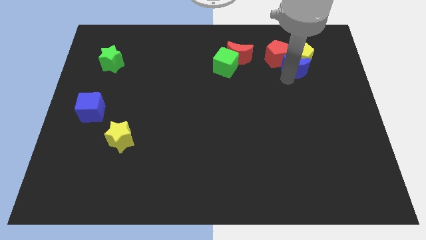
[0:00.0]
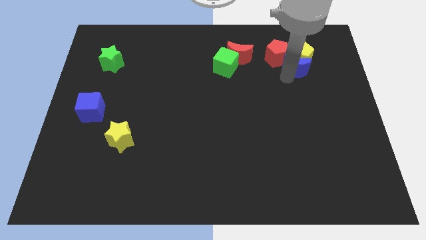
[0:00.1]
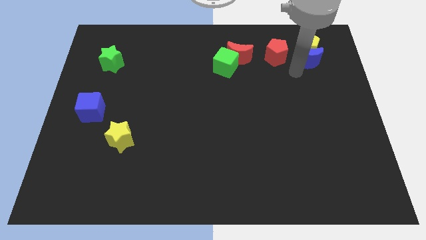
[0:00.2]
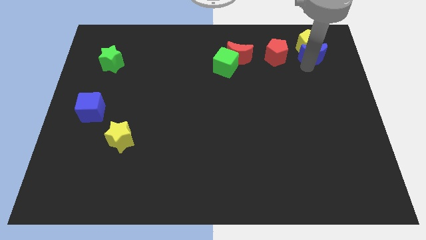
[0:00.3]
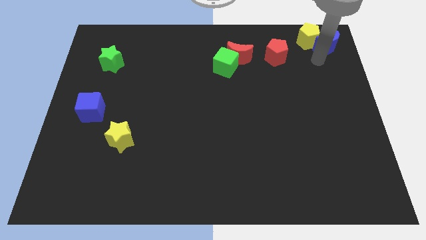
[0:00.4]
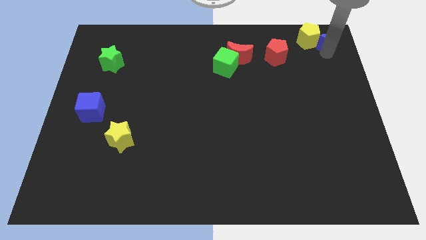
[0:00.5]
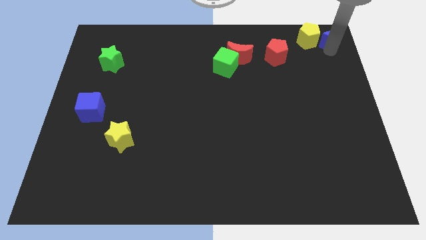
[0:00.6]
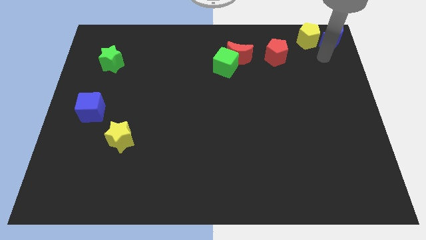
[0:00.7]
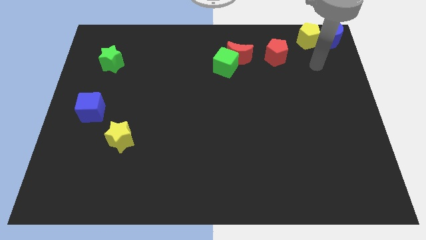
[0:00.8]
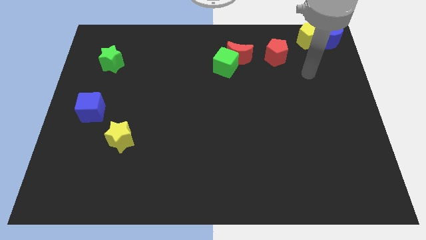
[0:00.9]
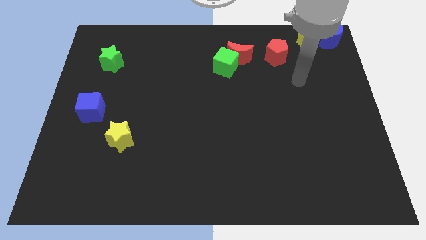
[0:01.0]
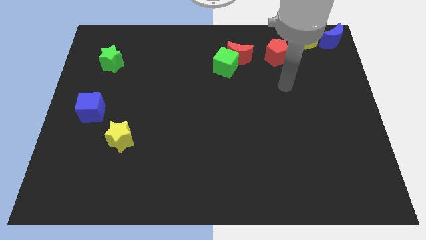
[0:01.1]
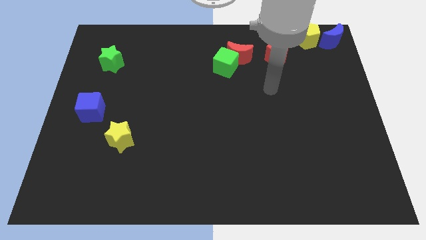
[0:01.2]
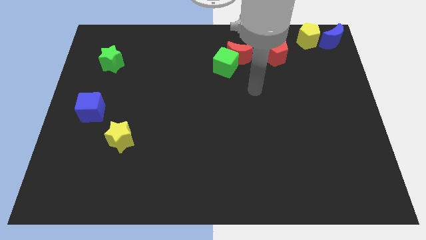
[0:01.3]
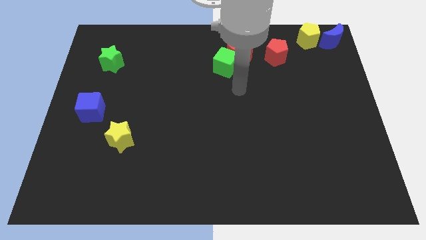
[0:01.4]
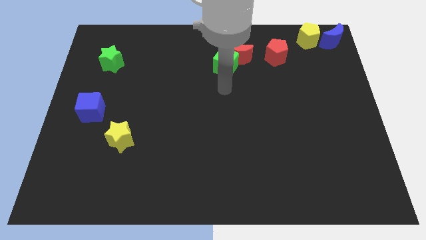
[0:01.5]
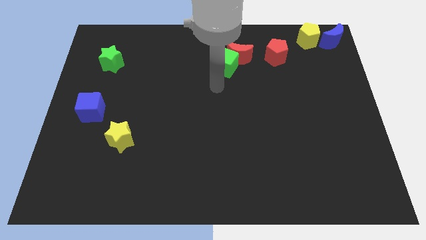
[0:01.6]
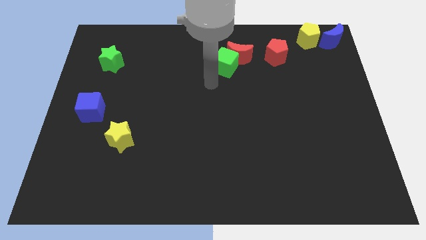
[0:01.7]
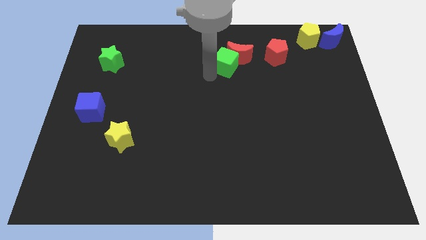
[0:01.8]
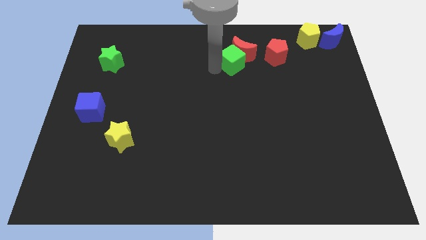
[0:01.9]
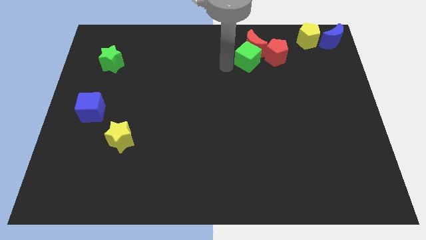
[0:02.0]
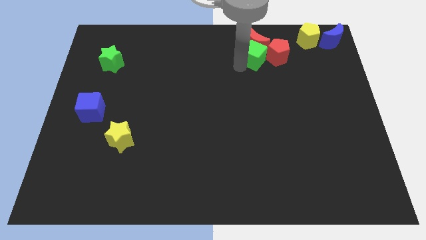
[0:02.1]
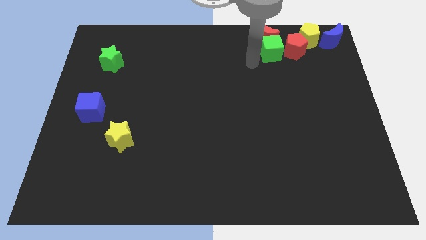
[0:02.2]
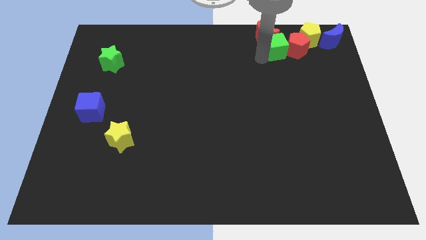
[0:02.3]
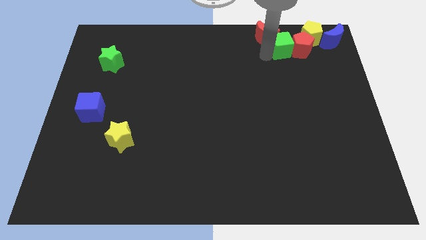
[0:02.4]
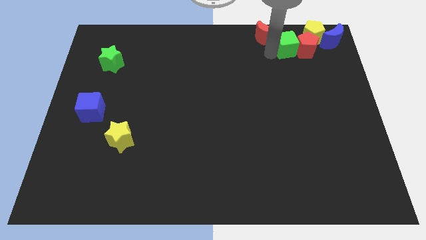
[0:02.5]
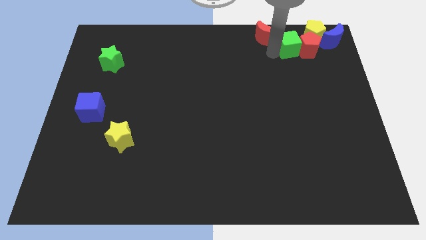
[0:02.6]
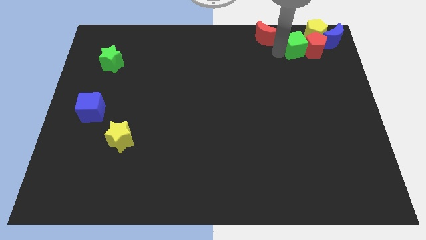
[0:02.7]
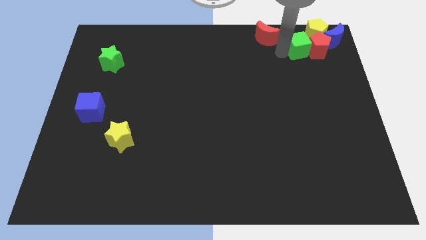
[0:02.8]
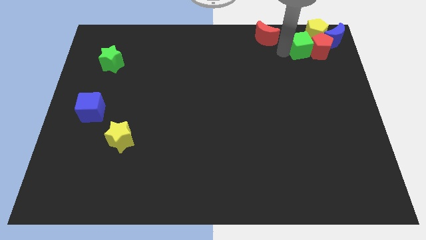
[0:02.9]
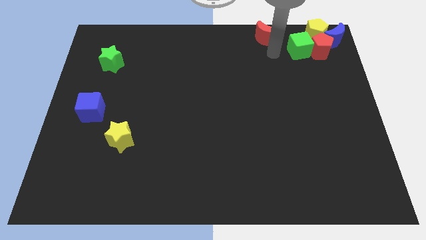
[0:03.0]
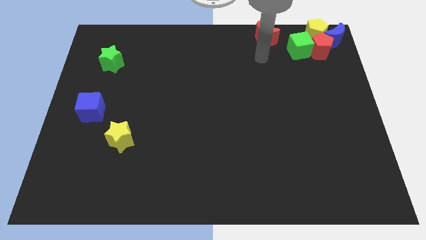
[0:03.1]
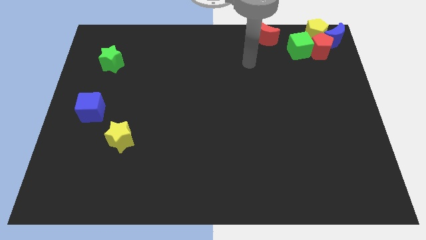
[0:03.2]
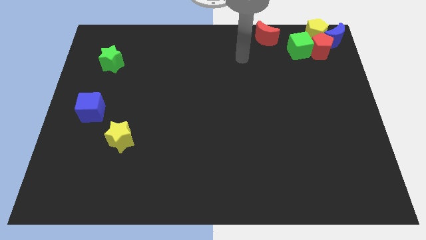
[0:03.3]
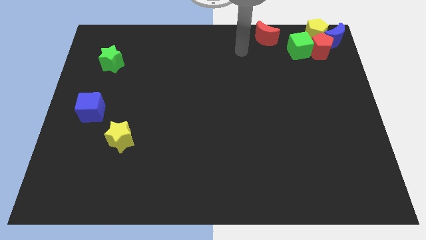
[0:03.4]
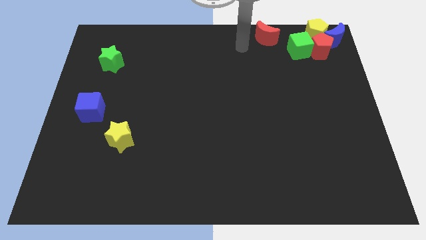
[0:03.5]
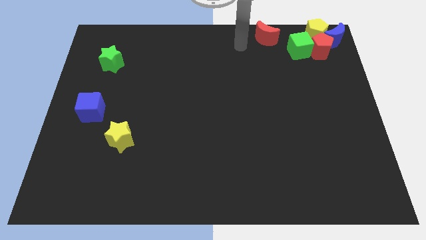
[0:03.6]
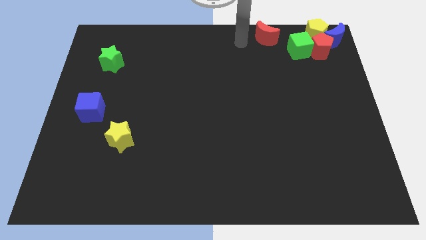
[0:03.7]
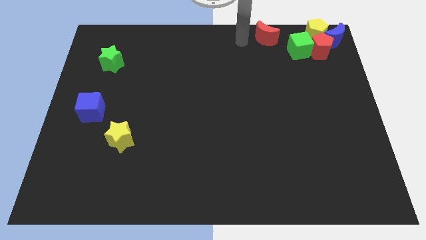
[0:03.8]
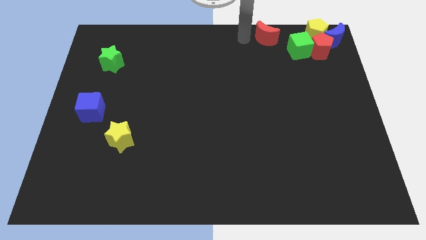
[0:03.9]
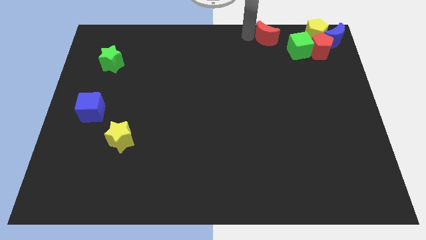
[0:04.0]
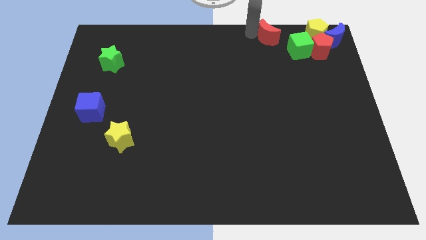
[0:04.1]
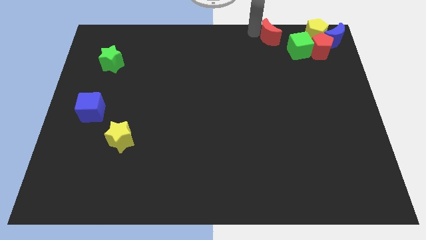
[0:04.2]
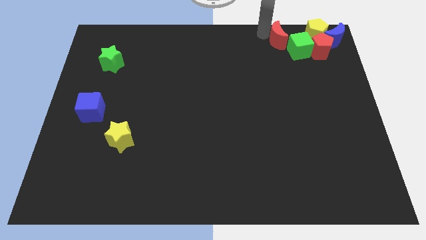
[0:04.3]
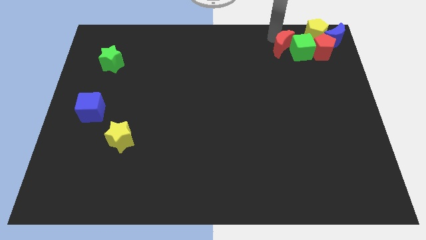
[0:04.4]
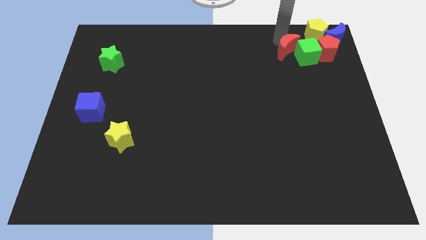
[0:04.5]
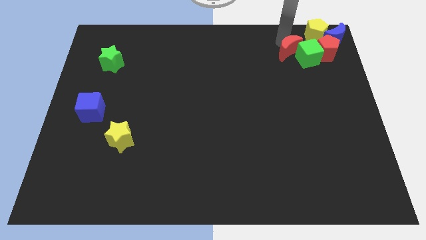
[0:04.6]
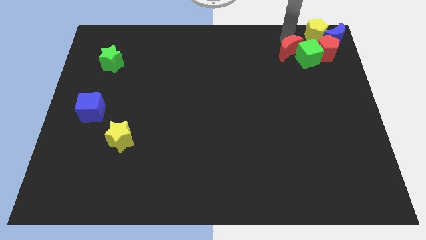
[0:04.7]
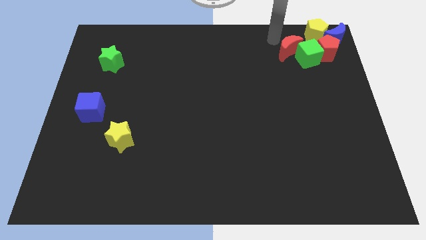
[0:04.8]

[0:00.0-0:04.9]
push the group of blocks to the top right corner

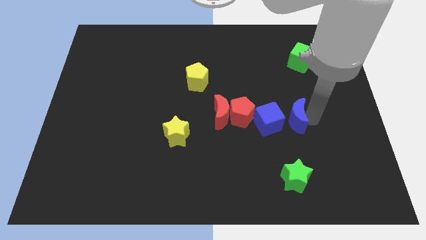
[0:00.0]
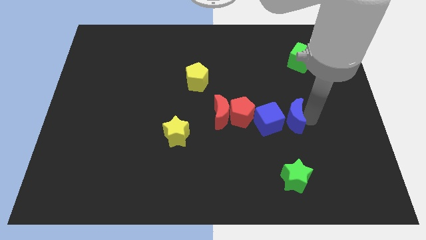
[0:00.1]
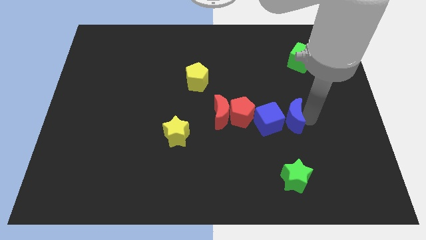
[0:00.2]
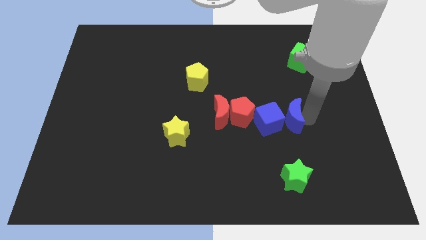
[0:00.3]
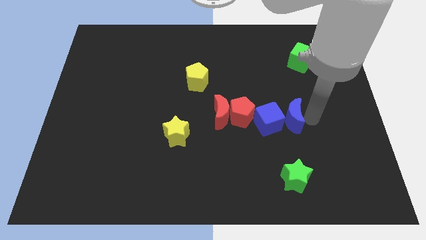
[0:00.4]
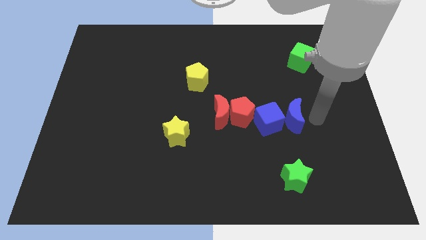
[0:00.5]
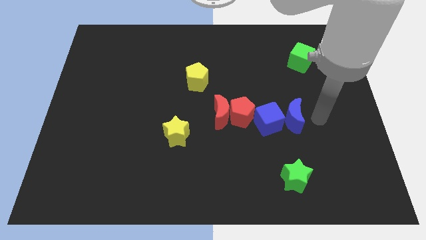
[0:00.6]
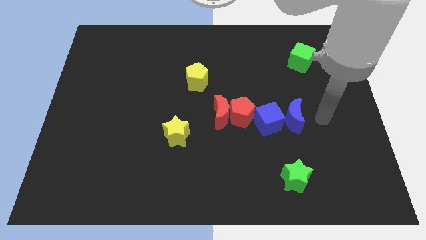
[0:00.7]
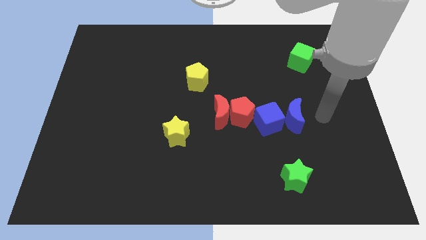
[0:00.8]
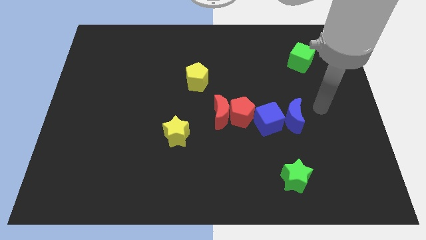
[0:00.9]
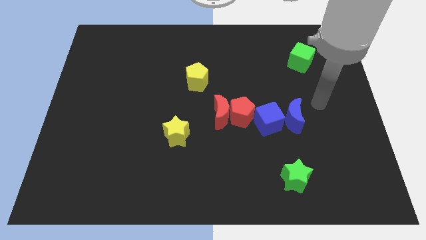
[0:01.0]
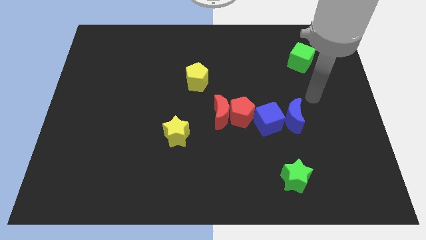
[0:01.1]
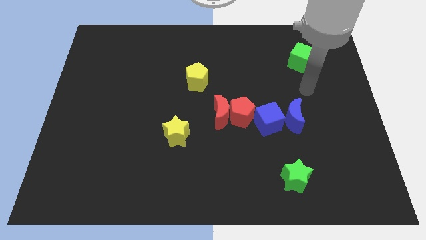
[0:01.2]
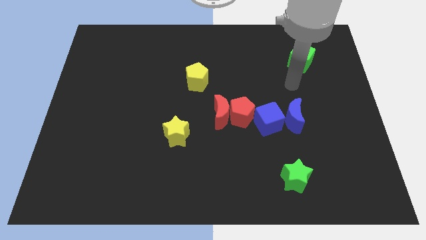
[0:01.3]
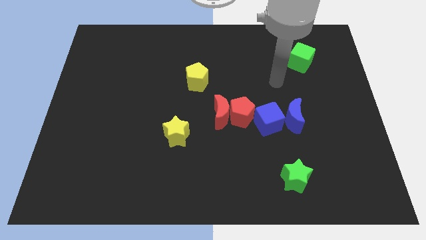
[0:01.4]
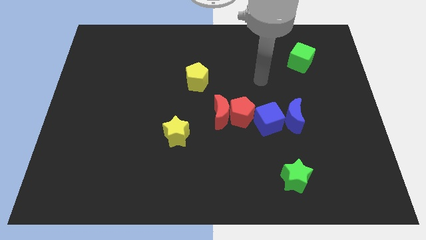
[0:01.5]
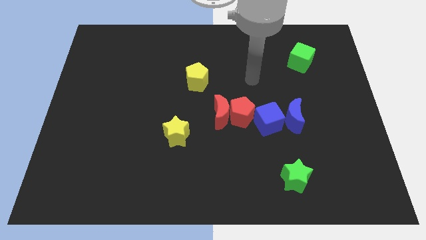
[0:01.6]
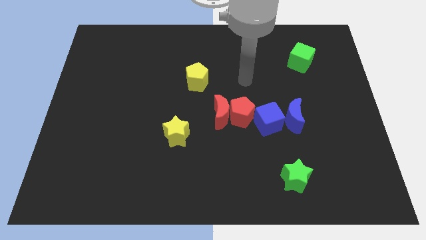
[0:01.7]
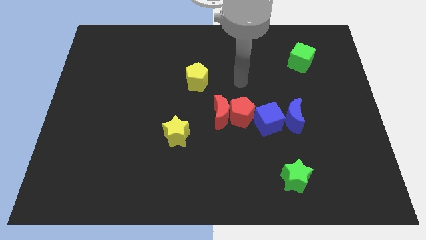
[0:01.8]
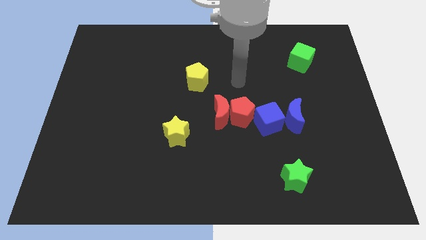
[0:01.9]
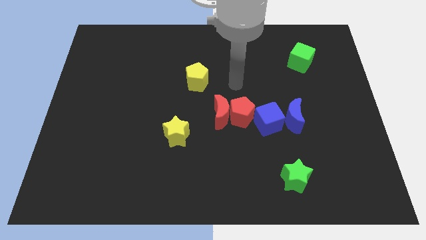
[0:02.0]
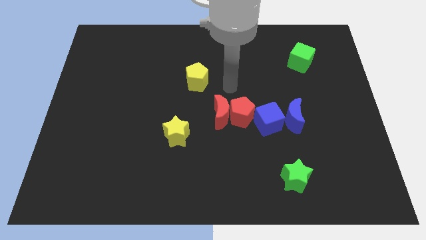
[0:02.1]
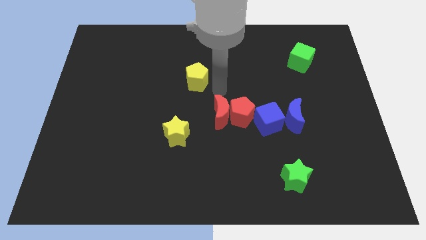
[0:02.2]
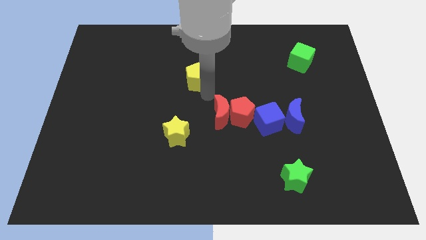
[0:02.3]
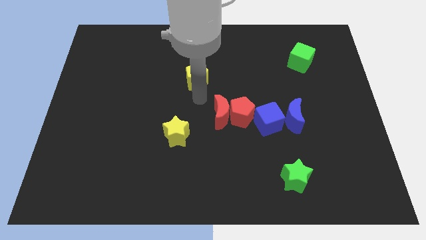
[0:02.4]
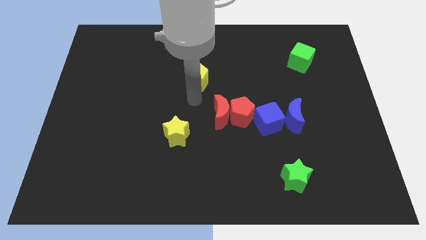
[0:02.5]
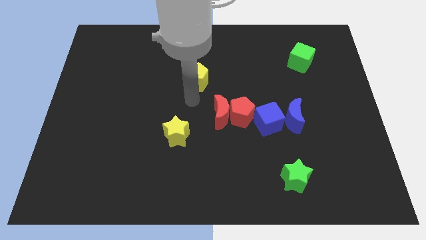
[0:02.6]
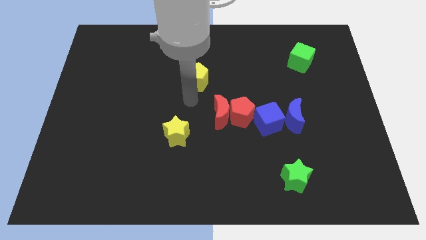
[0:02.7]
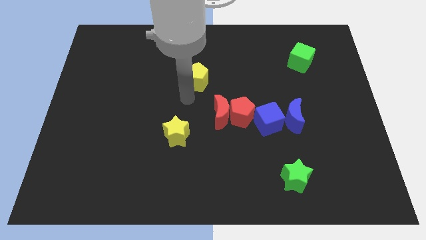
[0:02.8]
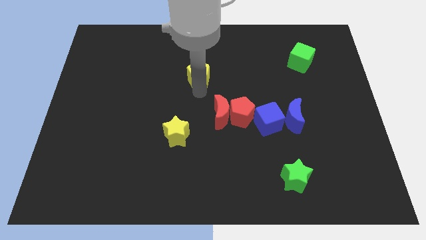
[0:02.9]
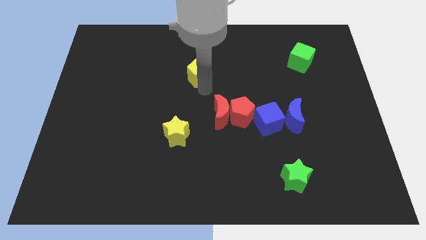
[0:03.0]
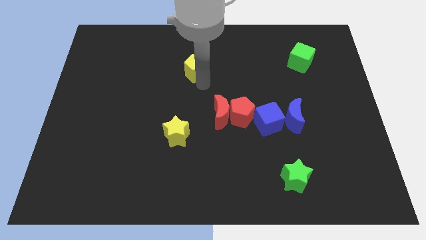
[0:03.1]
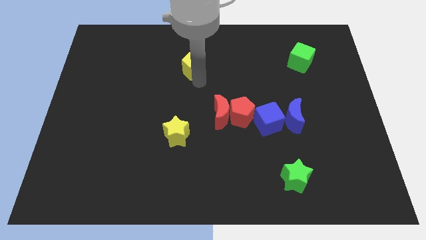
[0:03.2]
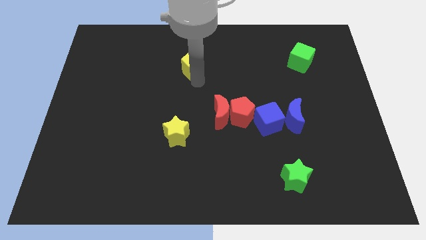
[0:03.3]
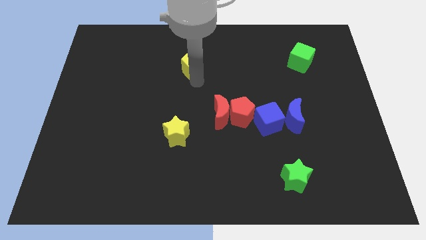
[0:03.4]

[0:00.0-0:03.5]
move the yellow pentagon slightly upwards

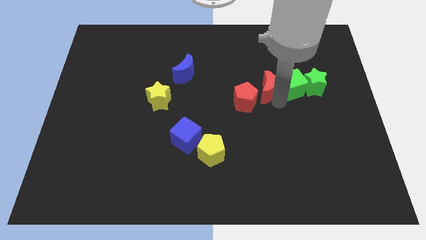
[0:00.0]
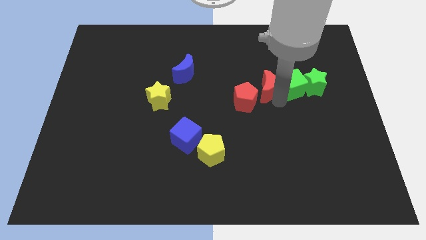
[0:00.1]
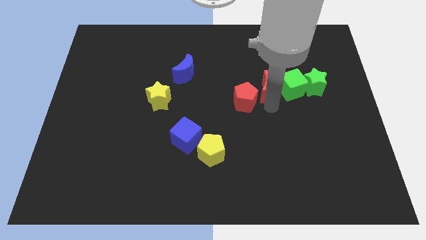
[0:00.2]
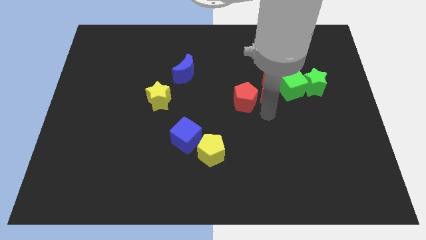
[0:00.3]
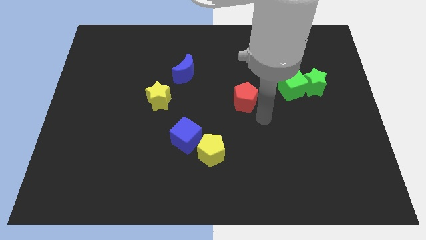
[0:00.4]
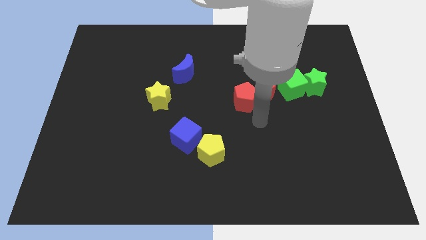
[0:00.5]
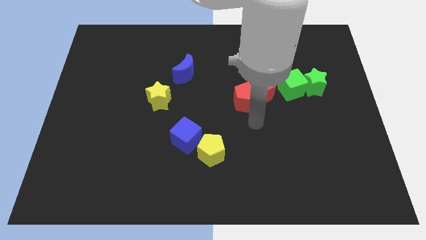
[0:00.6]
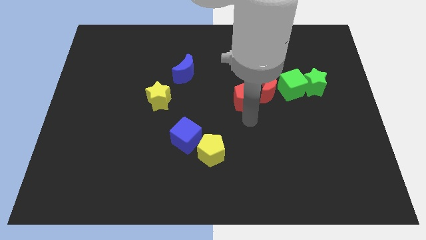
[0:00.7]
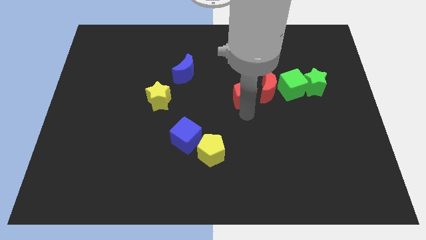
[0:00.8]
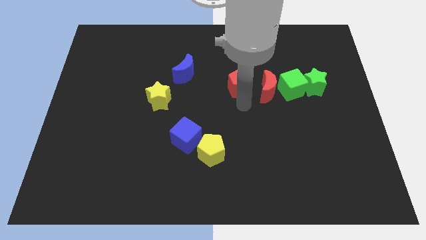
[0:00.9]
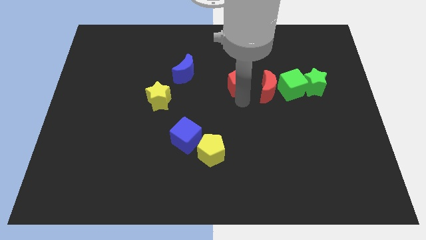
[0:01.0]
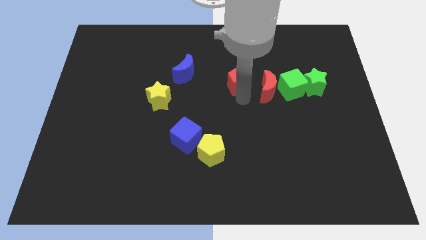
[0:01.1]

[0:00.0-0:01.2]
put the red pentagon horizontal to the red moon on the left side
